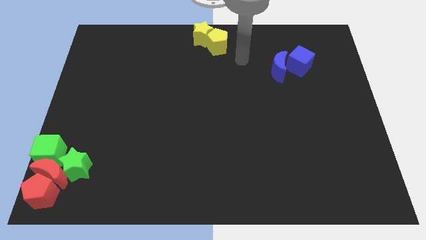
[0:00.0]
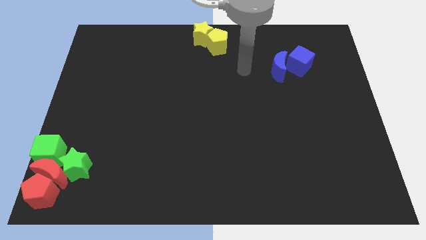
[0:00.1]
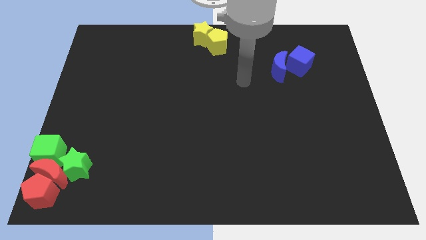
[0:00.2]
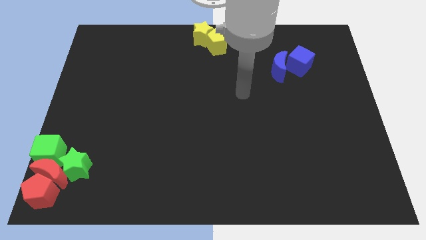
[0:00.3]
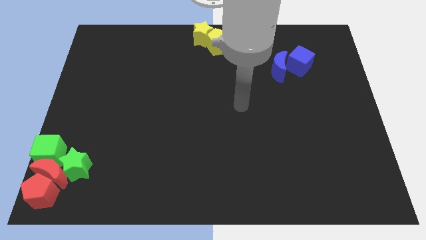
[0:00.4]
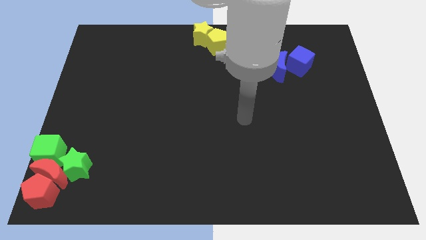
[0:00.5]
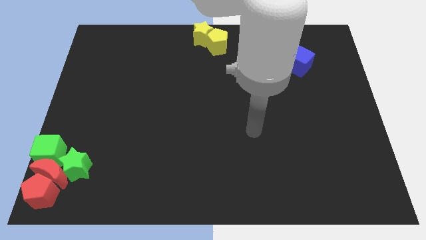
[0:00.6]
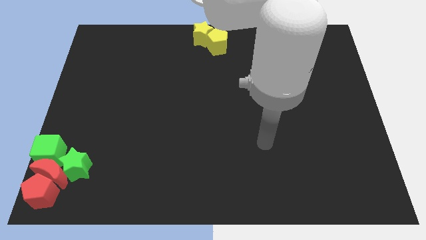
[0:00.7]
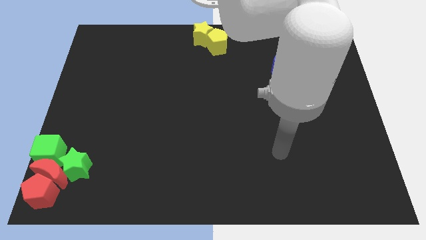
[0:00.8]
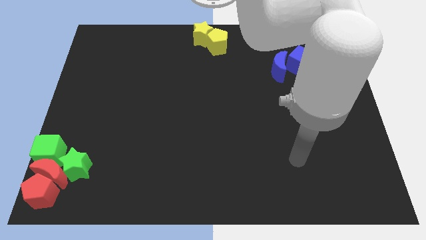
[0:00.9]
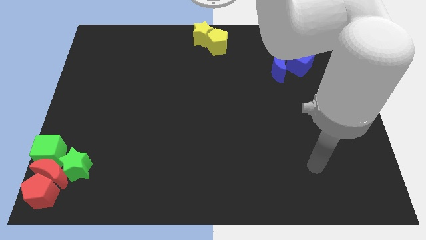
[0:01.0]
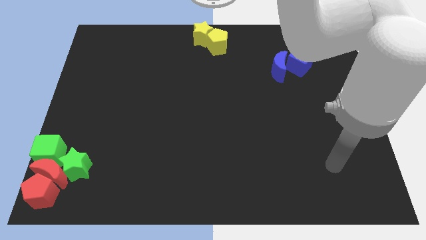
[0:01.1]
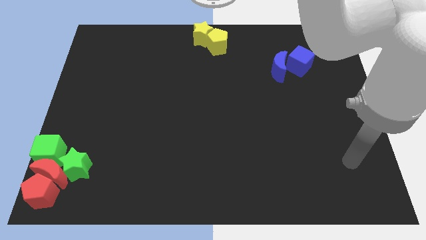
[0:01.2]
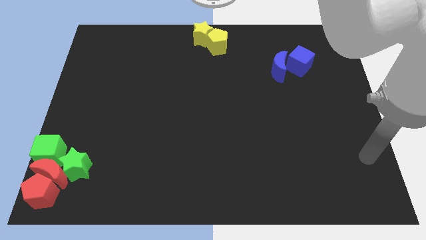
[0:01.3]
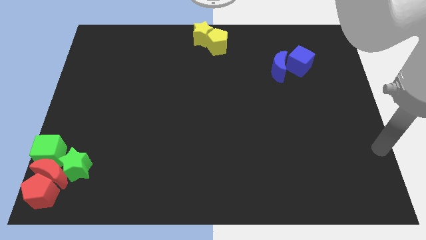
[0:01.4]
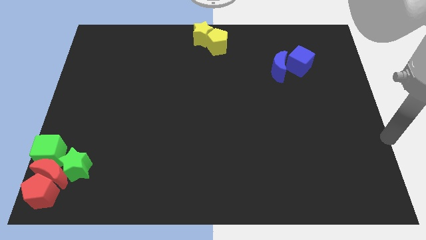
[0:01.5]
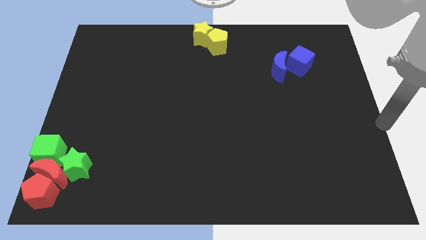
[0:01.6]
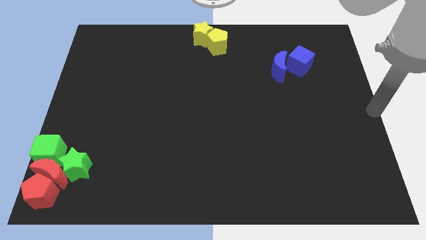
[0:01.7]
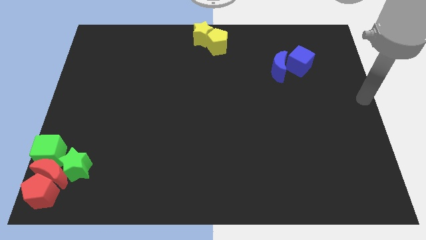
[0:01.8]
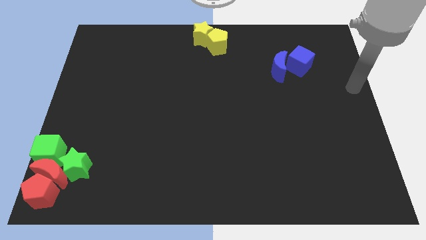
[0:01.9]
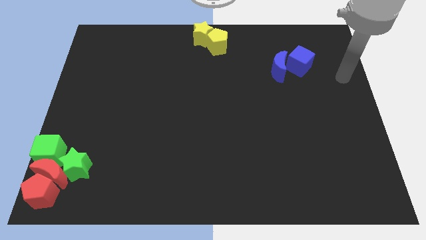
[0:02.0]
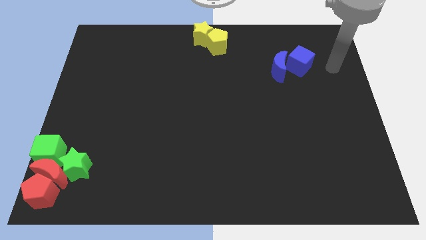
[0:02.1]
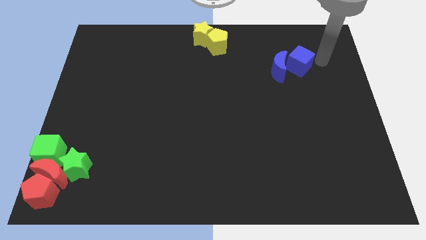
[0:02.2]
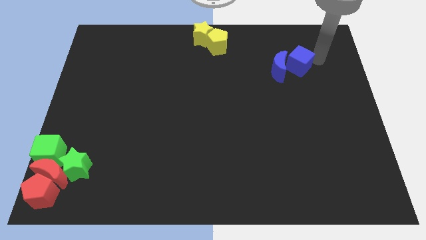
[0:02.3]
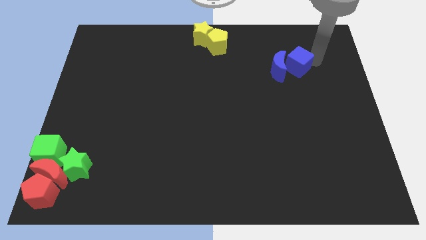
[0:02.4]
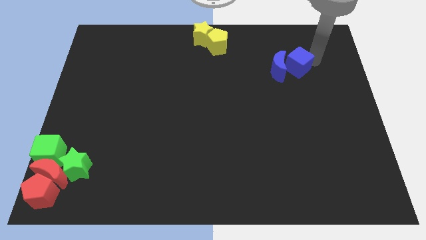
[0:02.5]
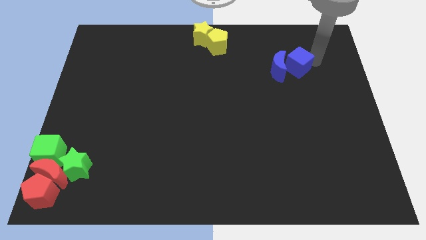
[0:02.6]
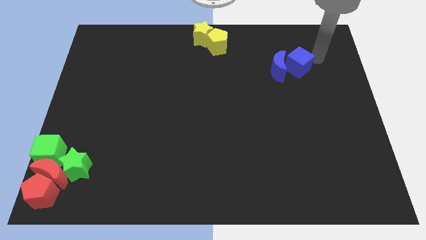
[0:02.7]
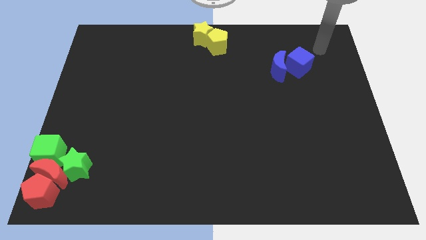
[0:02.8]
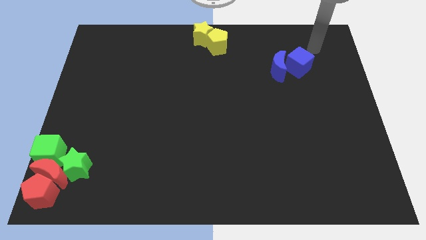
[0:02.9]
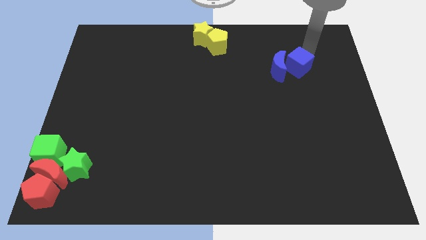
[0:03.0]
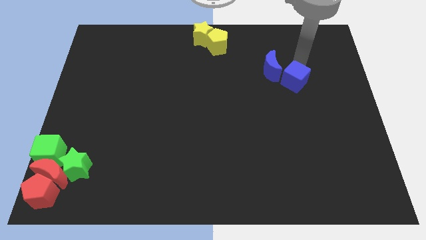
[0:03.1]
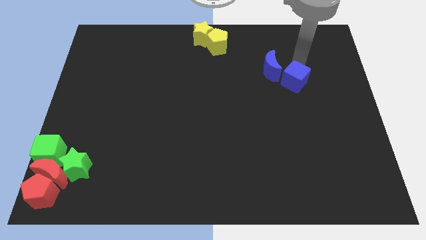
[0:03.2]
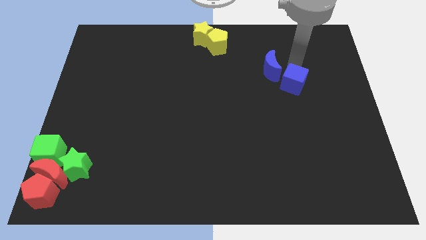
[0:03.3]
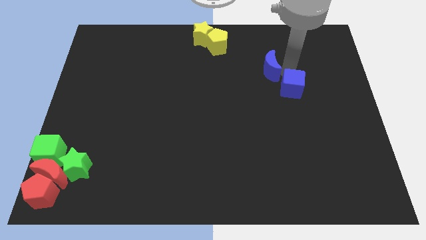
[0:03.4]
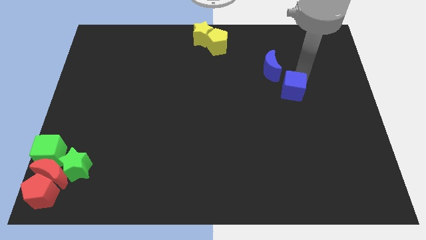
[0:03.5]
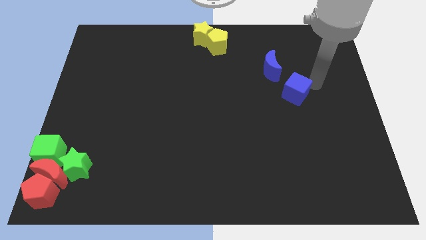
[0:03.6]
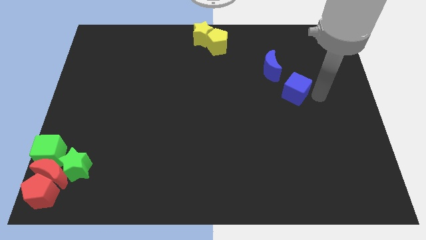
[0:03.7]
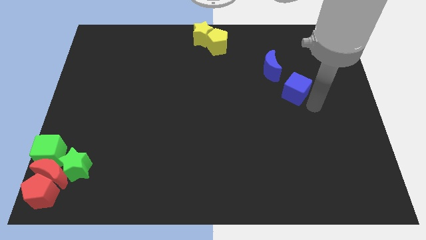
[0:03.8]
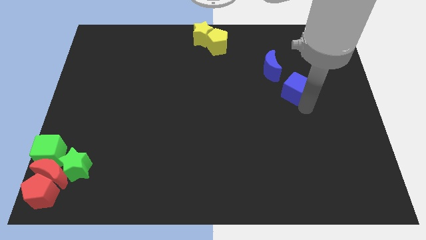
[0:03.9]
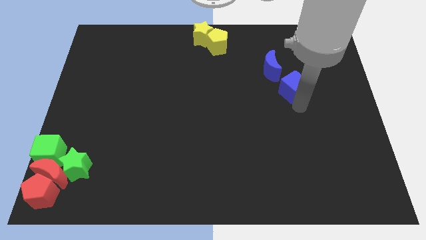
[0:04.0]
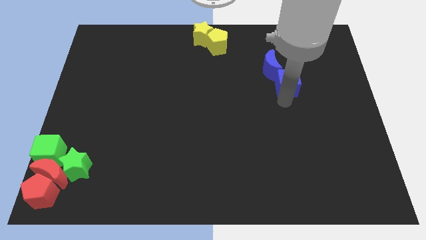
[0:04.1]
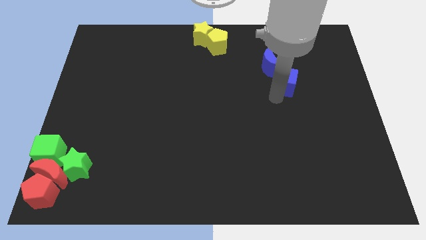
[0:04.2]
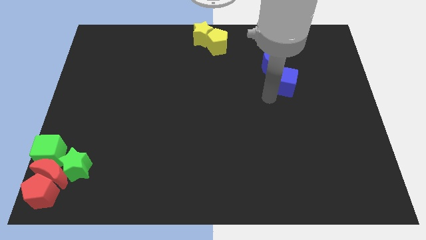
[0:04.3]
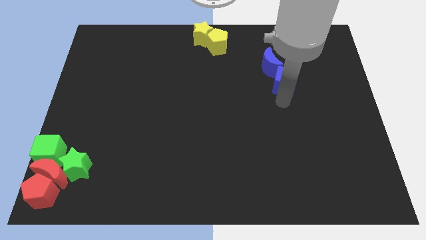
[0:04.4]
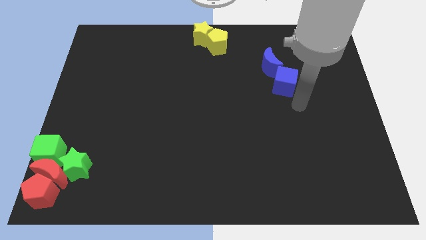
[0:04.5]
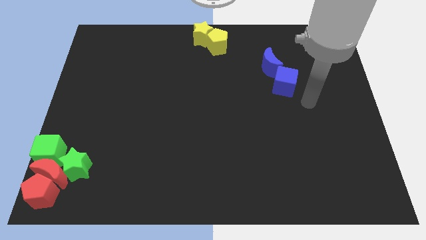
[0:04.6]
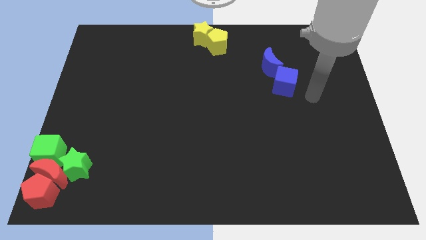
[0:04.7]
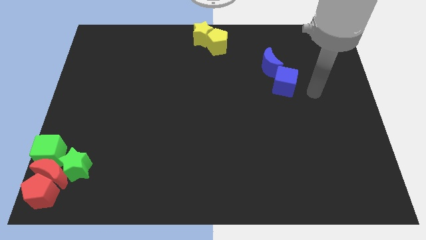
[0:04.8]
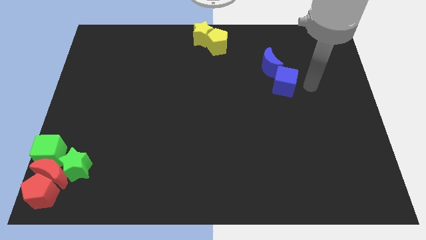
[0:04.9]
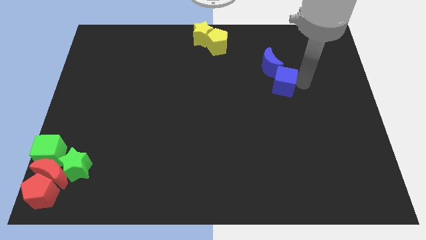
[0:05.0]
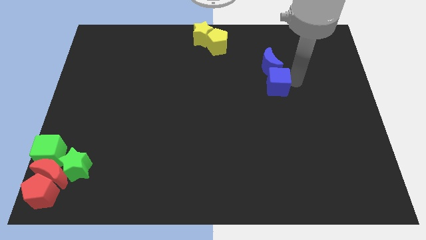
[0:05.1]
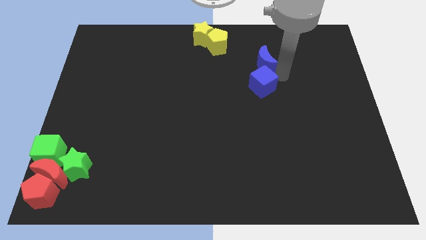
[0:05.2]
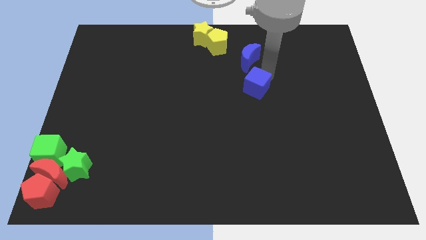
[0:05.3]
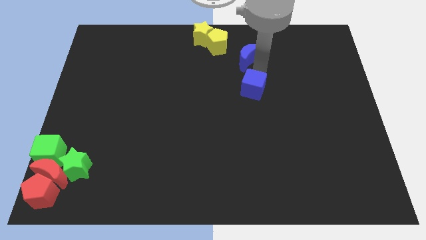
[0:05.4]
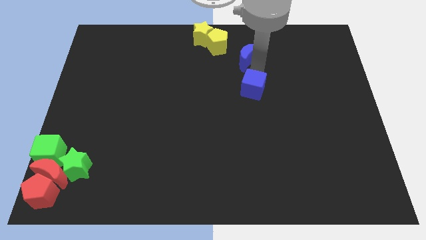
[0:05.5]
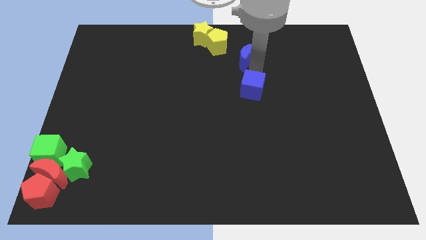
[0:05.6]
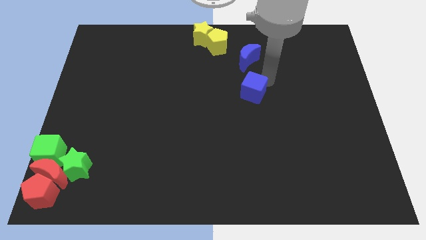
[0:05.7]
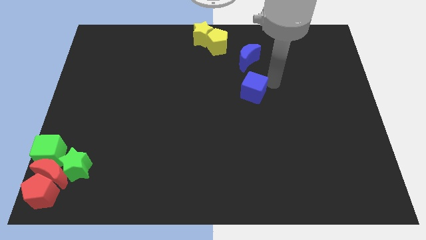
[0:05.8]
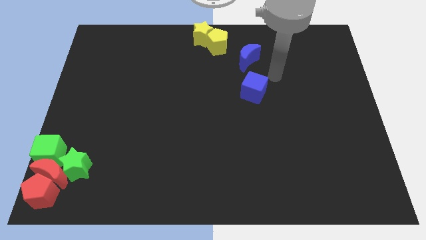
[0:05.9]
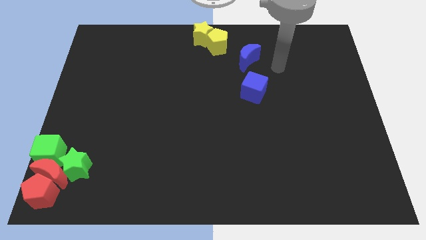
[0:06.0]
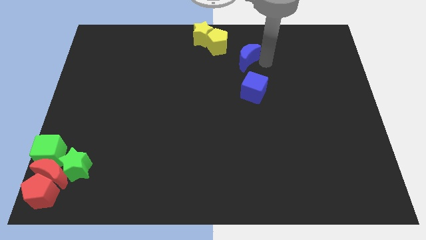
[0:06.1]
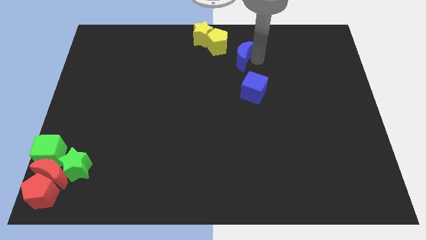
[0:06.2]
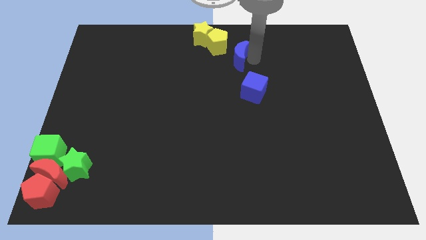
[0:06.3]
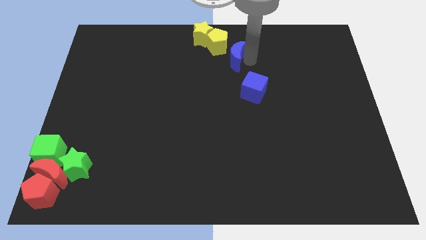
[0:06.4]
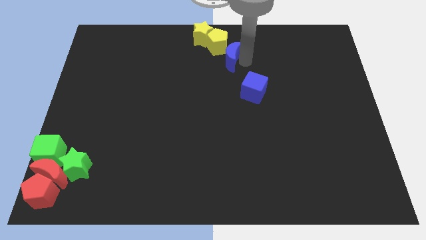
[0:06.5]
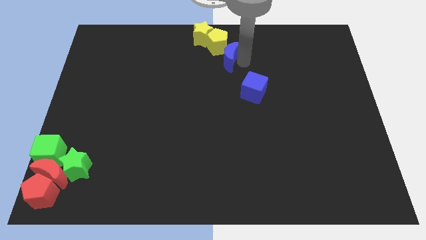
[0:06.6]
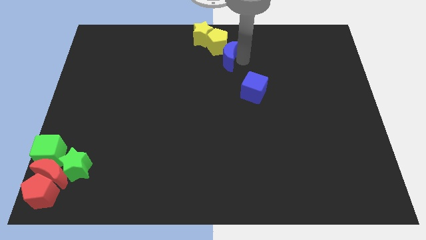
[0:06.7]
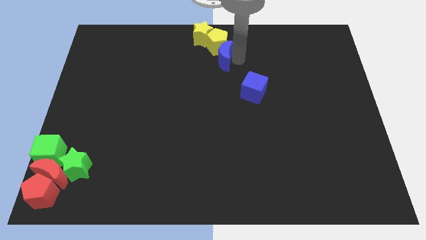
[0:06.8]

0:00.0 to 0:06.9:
separate blue moon from the blue cube

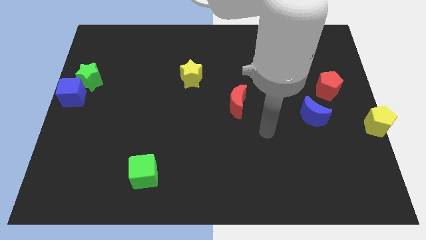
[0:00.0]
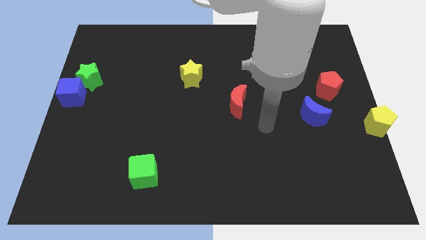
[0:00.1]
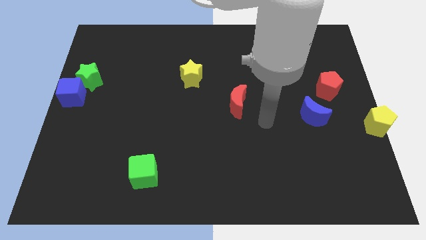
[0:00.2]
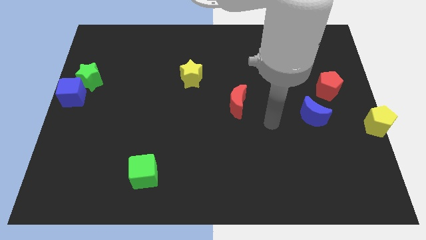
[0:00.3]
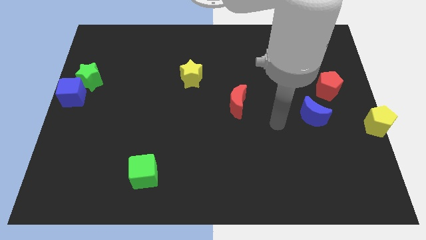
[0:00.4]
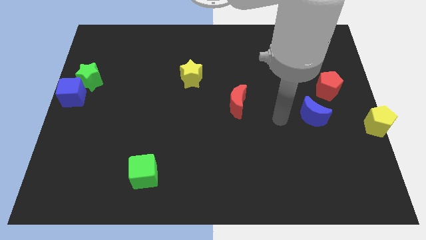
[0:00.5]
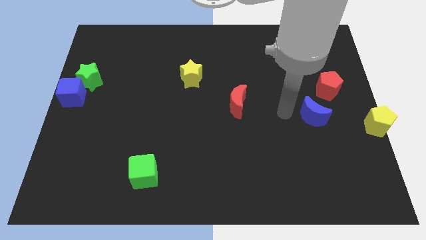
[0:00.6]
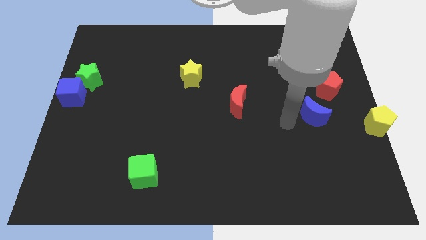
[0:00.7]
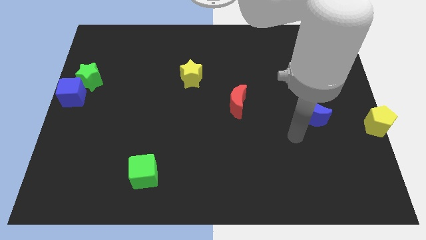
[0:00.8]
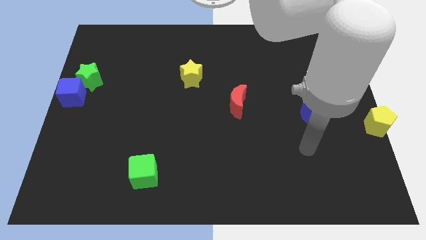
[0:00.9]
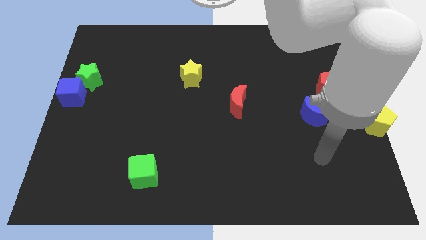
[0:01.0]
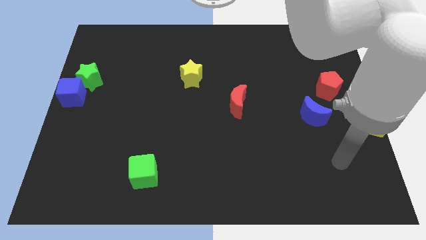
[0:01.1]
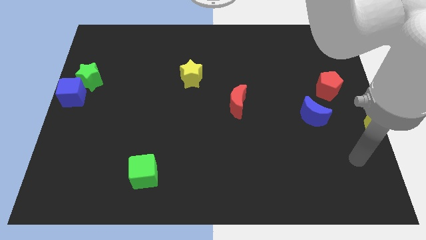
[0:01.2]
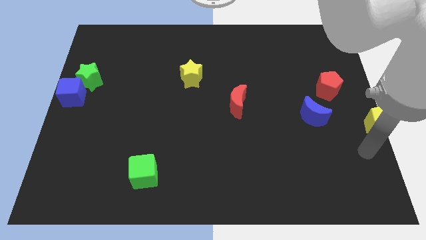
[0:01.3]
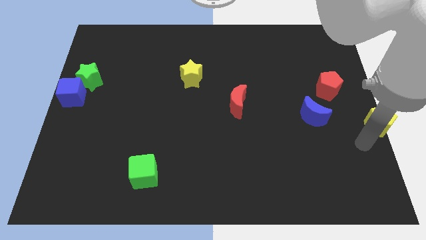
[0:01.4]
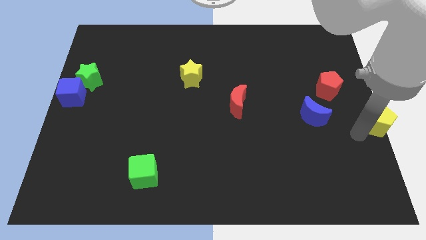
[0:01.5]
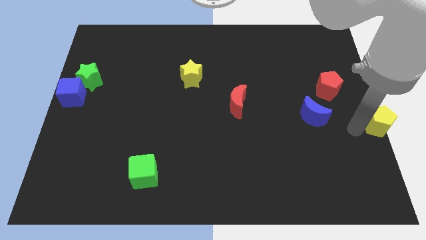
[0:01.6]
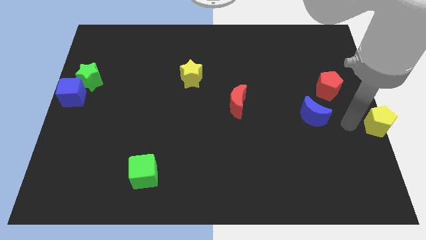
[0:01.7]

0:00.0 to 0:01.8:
place your arm in between yellow pentagon and blue moon

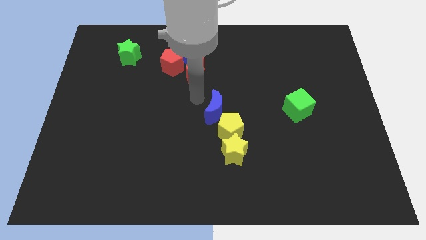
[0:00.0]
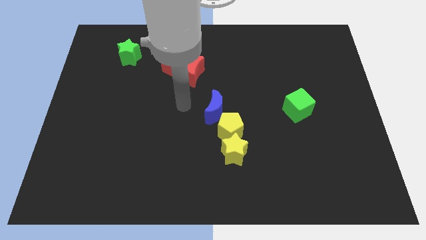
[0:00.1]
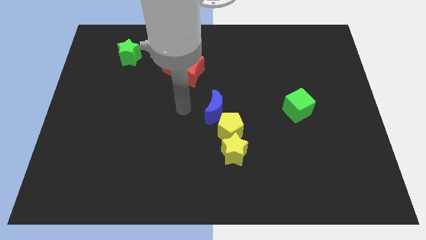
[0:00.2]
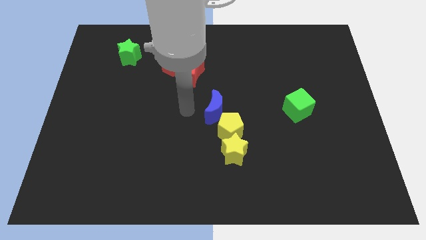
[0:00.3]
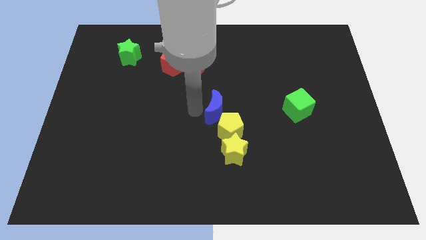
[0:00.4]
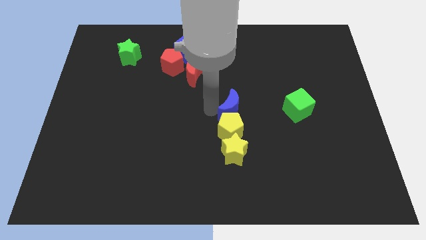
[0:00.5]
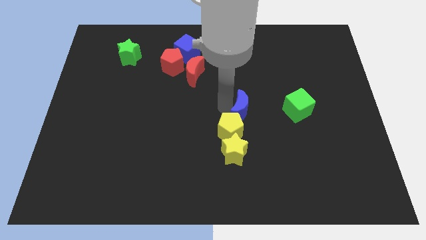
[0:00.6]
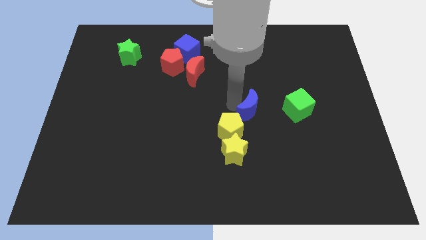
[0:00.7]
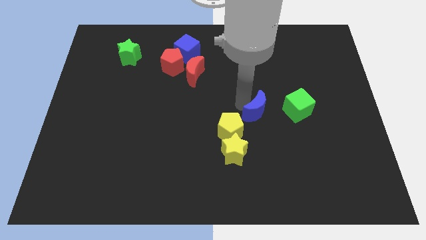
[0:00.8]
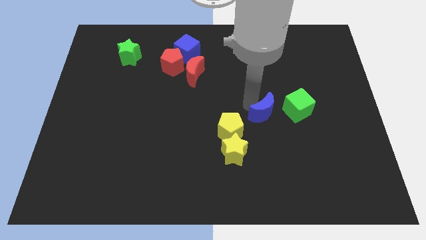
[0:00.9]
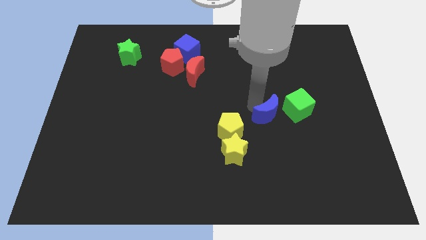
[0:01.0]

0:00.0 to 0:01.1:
push the blue crescent away from the yellow pentagon
